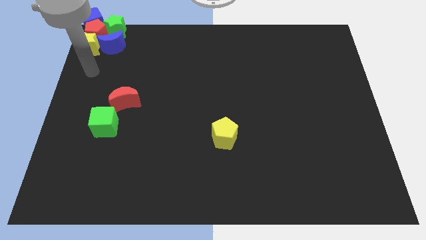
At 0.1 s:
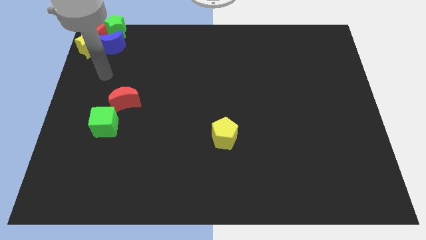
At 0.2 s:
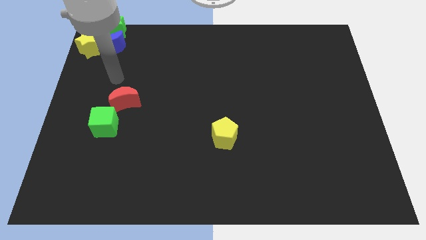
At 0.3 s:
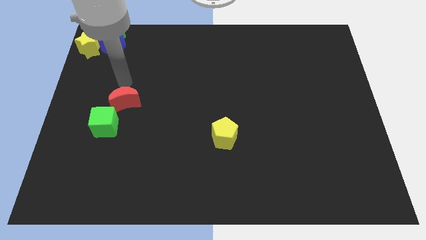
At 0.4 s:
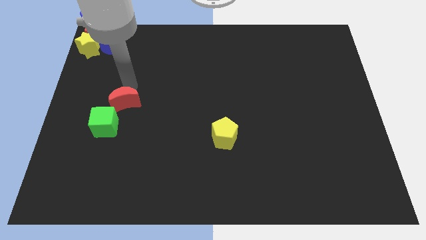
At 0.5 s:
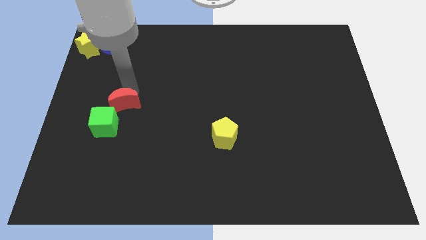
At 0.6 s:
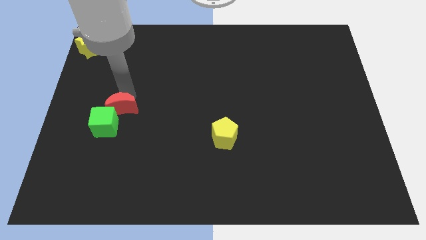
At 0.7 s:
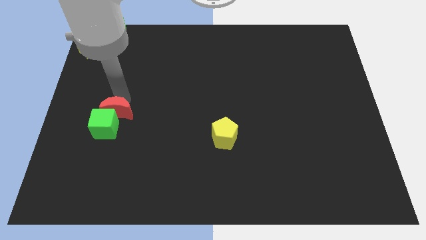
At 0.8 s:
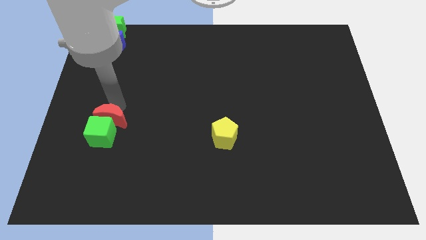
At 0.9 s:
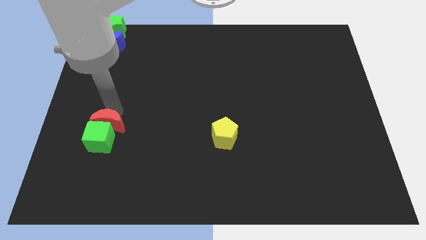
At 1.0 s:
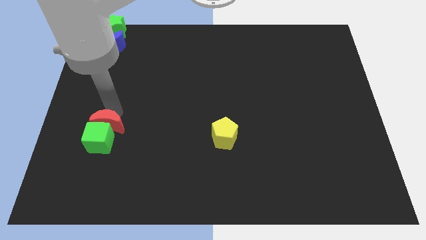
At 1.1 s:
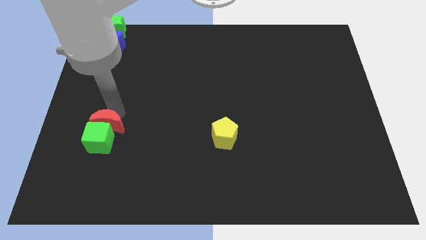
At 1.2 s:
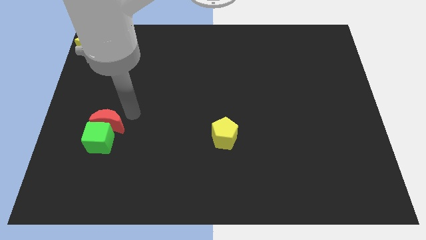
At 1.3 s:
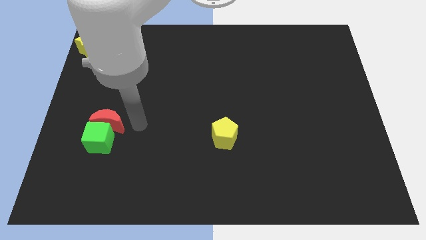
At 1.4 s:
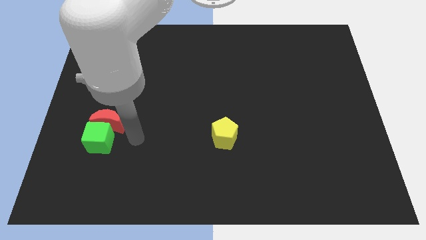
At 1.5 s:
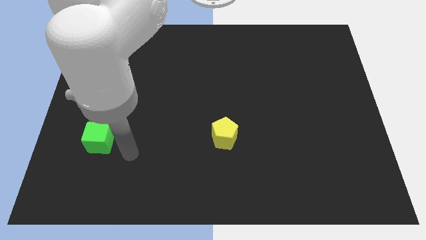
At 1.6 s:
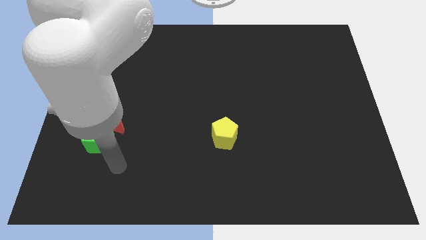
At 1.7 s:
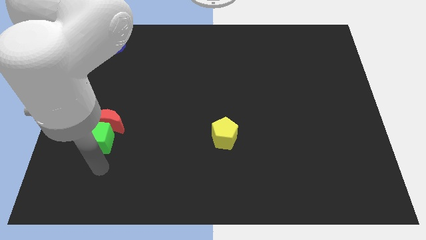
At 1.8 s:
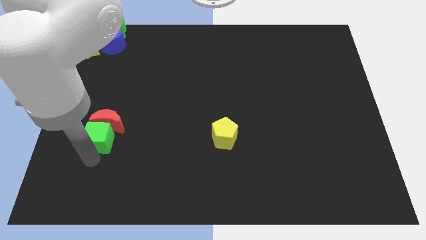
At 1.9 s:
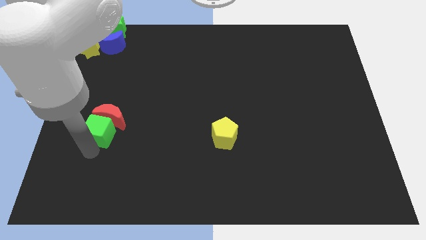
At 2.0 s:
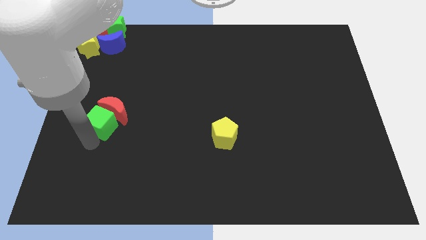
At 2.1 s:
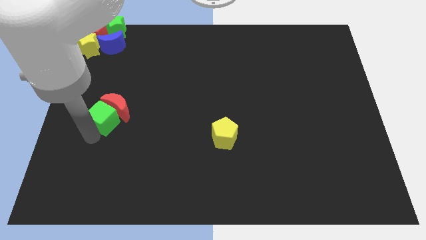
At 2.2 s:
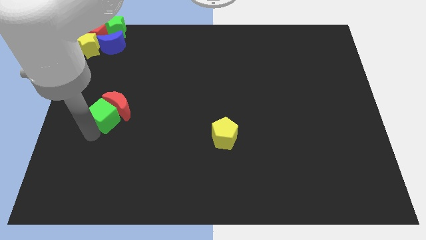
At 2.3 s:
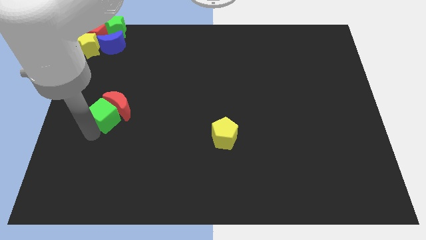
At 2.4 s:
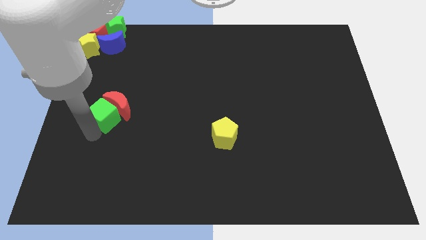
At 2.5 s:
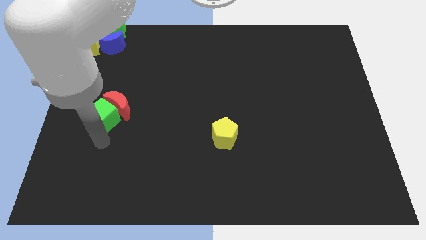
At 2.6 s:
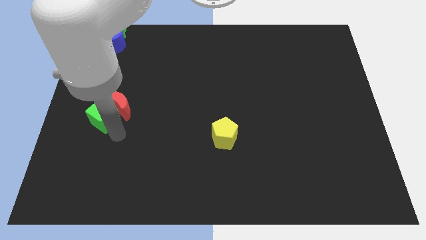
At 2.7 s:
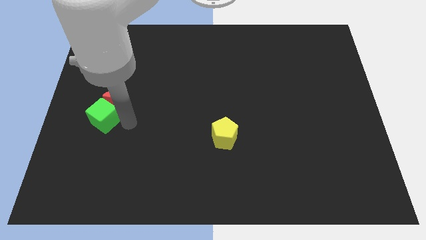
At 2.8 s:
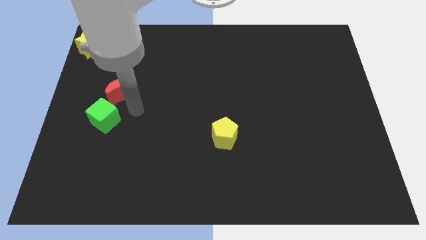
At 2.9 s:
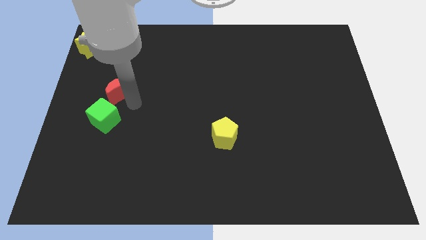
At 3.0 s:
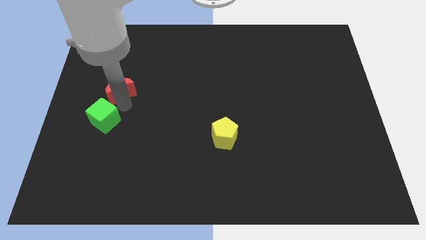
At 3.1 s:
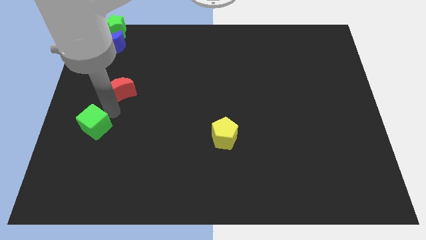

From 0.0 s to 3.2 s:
push the red crescent towards the top side

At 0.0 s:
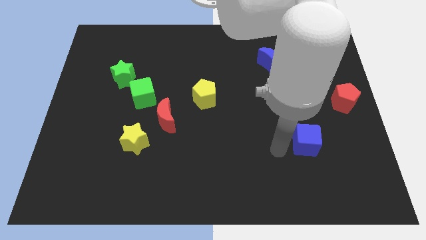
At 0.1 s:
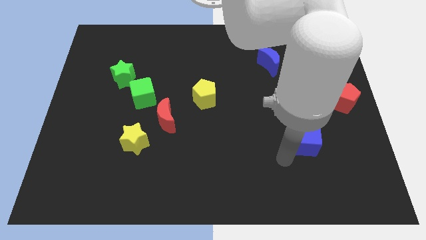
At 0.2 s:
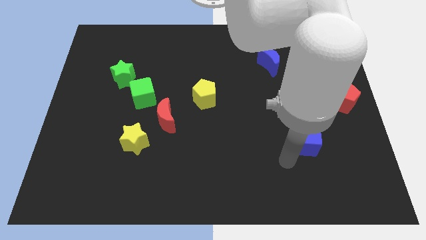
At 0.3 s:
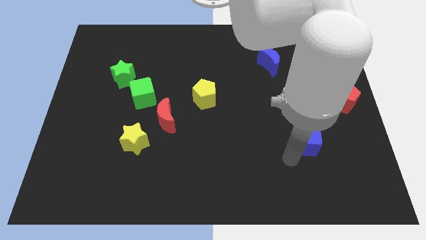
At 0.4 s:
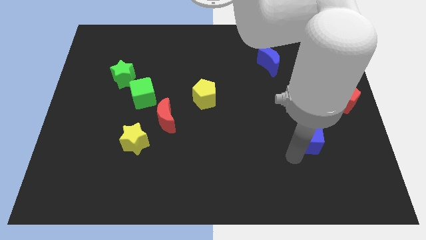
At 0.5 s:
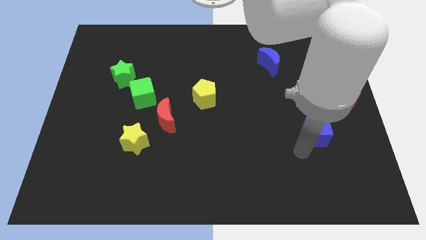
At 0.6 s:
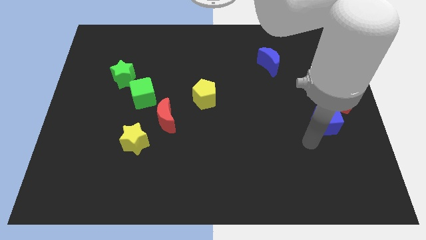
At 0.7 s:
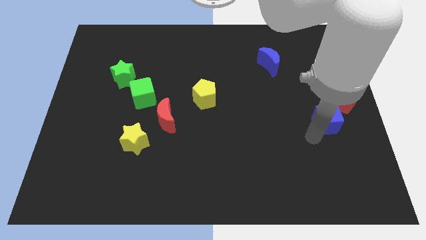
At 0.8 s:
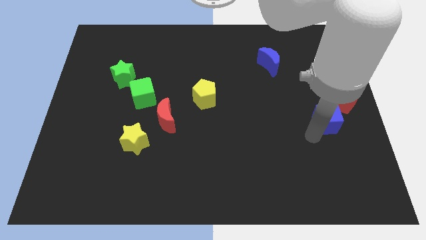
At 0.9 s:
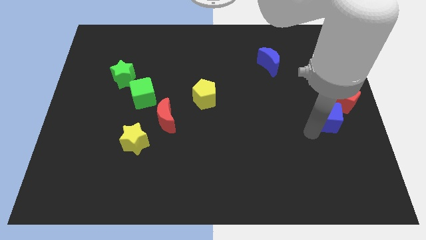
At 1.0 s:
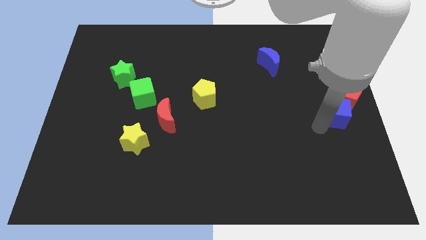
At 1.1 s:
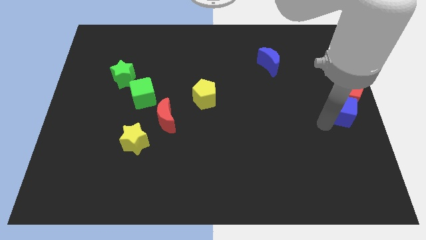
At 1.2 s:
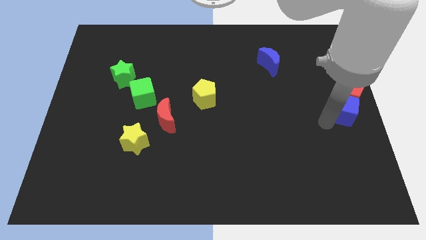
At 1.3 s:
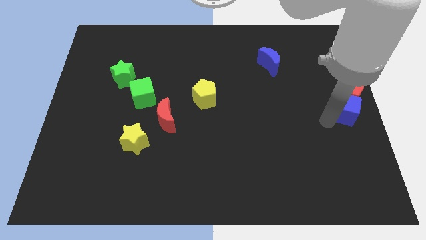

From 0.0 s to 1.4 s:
push the blue cube into the red pentagon

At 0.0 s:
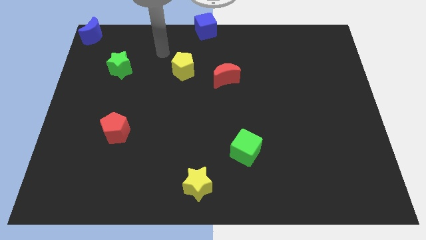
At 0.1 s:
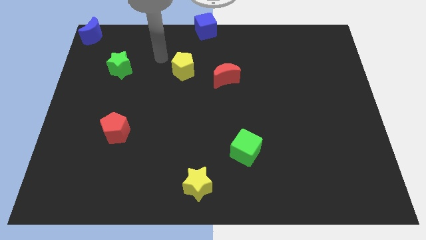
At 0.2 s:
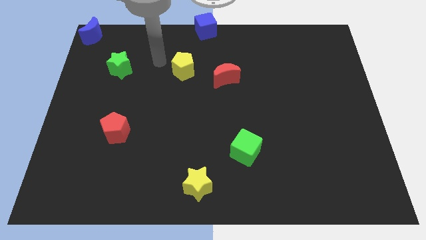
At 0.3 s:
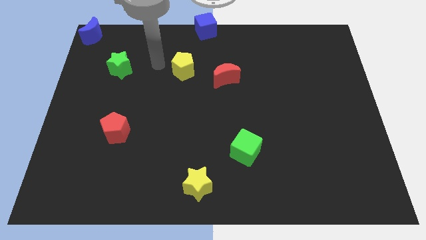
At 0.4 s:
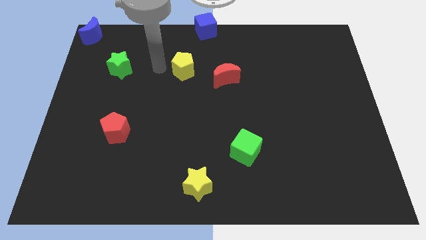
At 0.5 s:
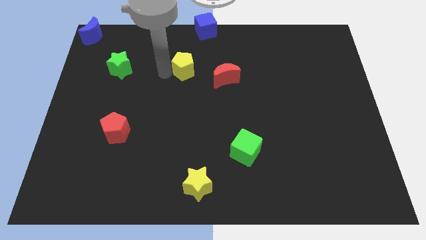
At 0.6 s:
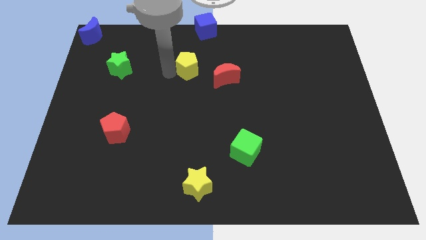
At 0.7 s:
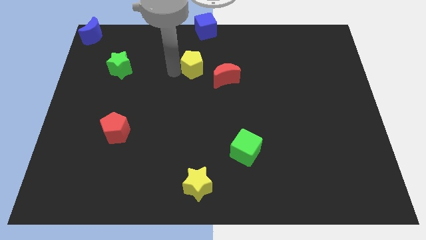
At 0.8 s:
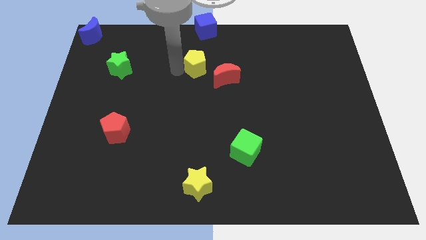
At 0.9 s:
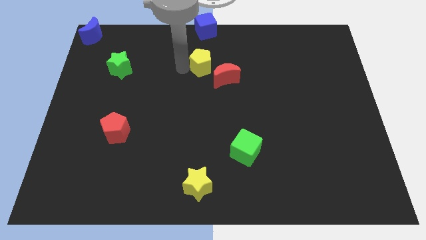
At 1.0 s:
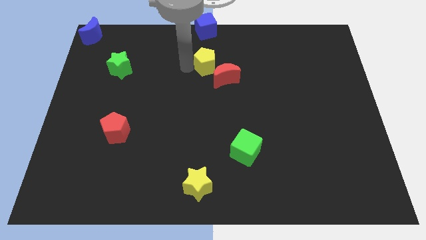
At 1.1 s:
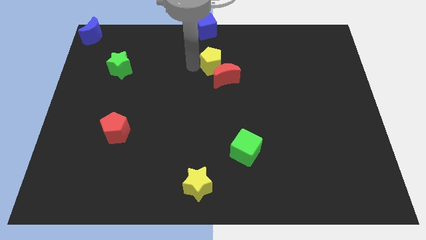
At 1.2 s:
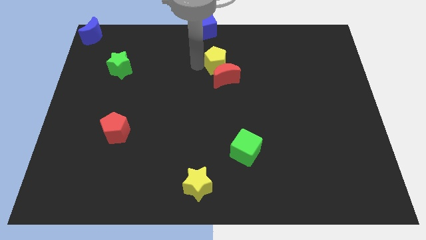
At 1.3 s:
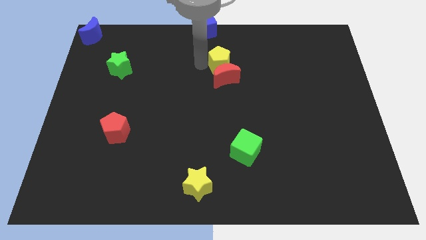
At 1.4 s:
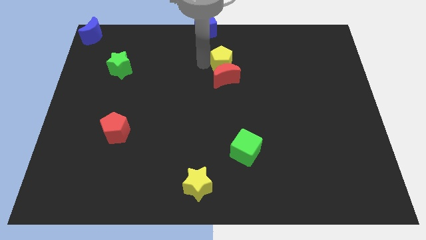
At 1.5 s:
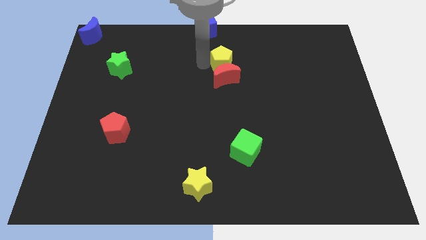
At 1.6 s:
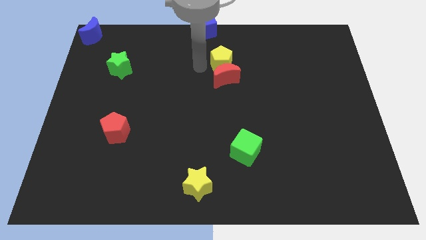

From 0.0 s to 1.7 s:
move the yellow pentagon above the red crescent

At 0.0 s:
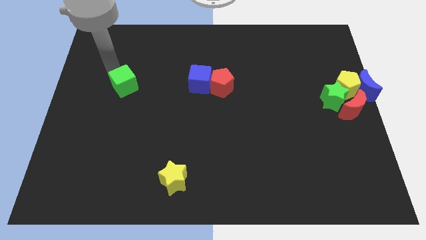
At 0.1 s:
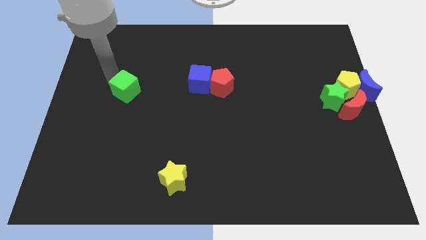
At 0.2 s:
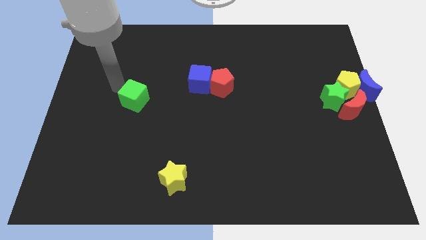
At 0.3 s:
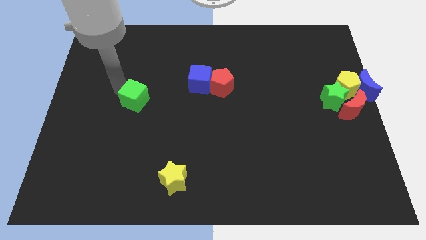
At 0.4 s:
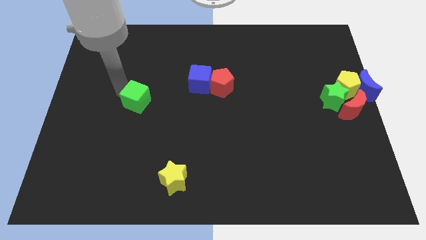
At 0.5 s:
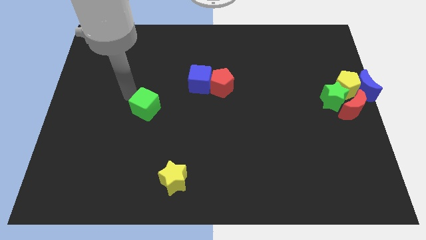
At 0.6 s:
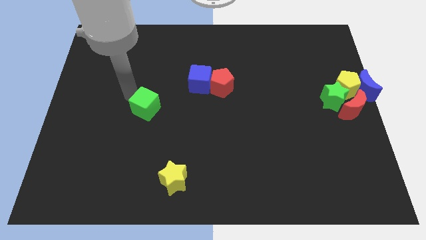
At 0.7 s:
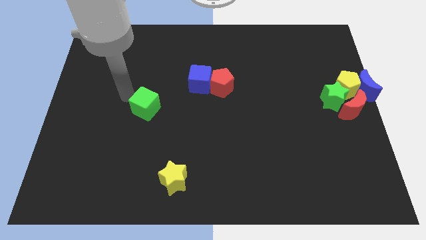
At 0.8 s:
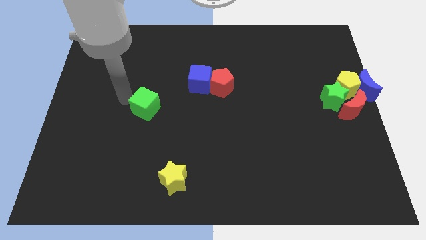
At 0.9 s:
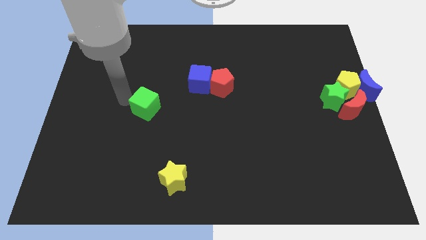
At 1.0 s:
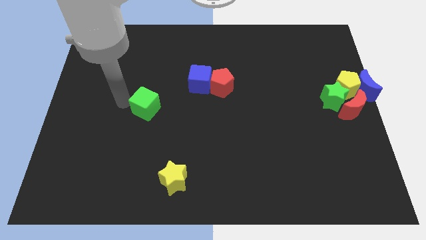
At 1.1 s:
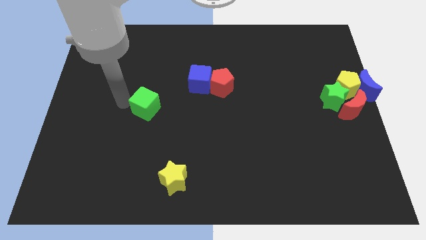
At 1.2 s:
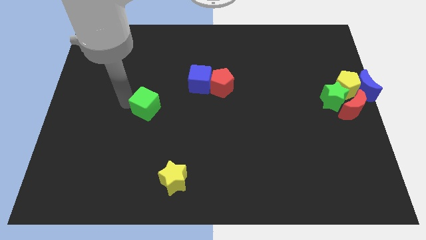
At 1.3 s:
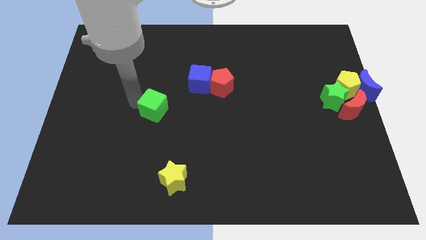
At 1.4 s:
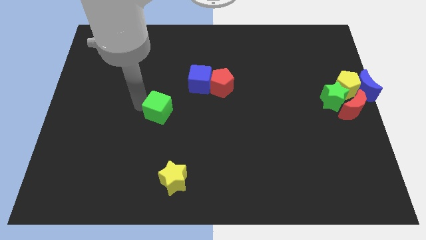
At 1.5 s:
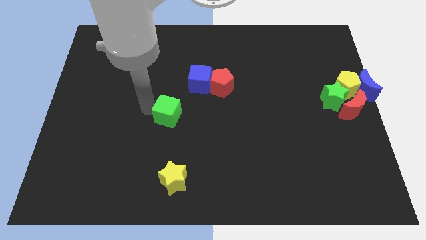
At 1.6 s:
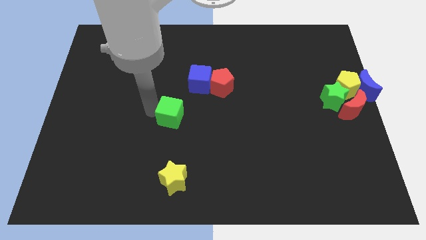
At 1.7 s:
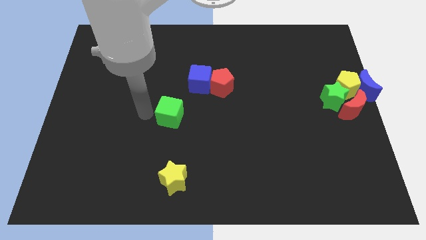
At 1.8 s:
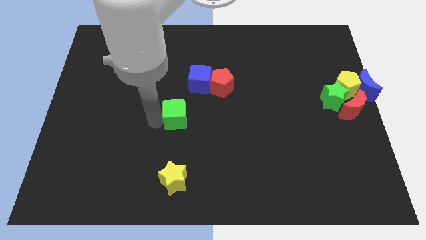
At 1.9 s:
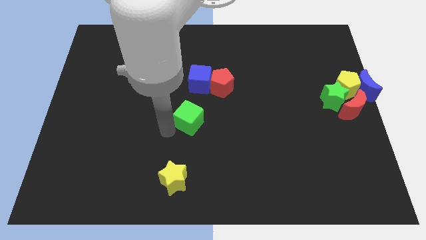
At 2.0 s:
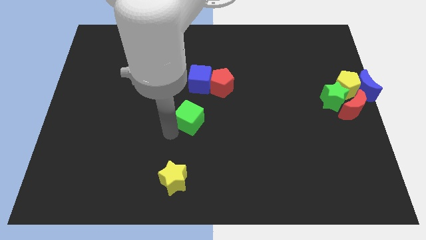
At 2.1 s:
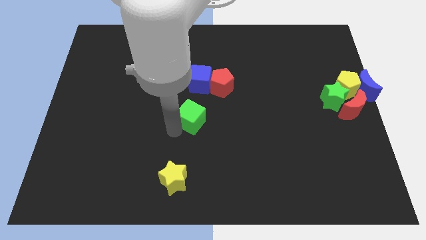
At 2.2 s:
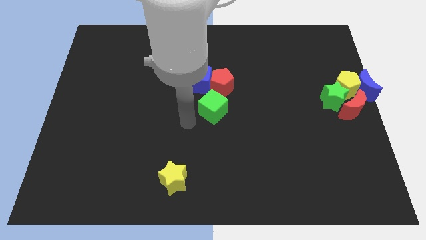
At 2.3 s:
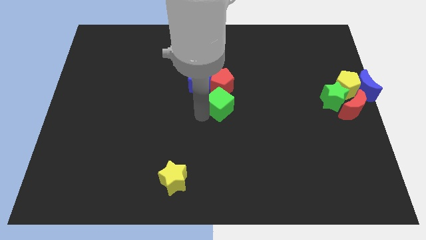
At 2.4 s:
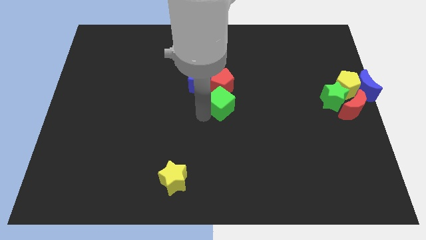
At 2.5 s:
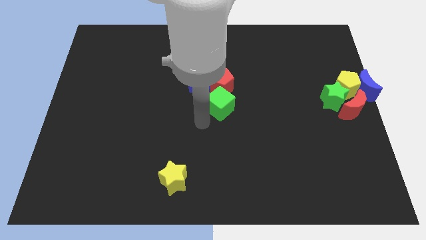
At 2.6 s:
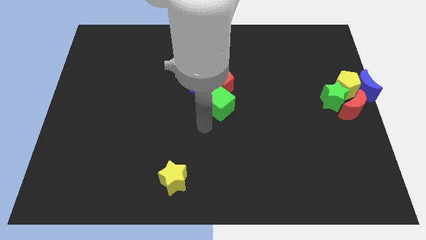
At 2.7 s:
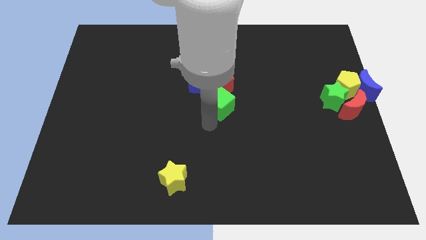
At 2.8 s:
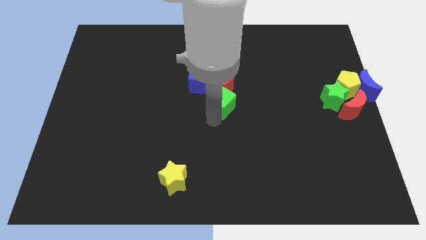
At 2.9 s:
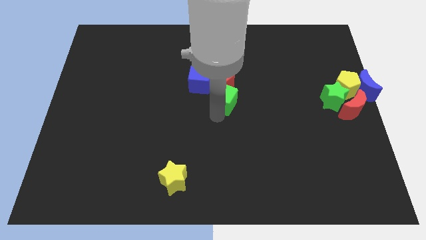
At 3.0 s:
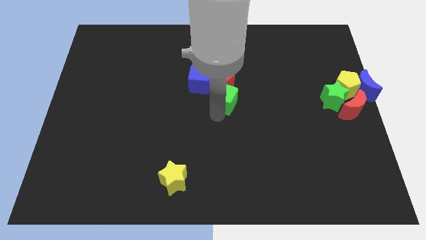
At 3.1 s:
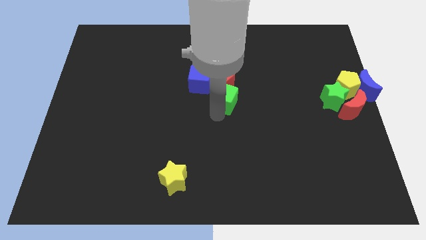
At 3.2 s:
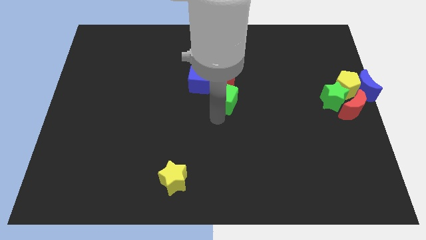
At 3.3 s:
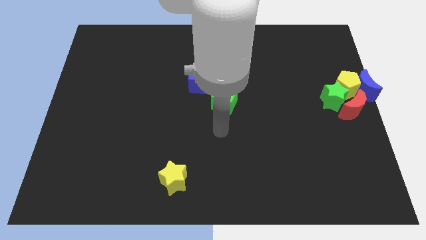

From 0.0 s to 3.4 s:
place the green cube at the bottom of the red pentagon
